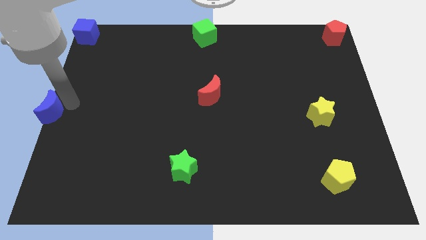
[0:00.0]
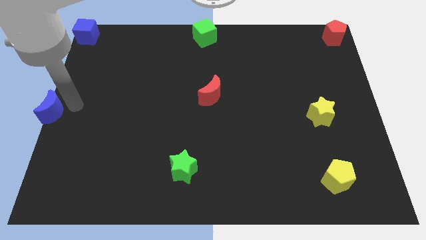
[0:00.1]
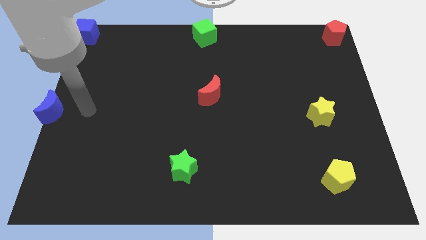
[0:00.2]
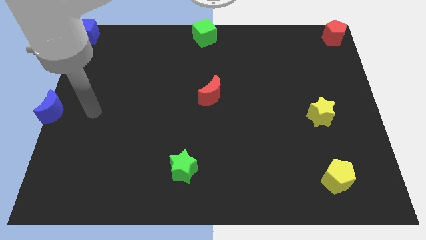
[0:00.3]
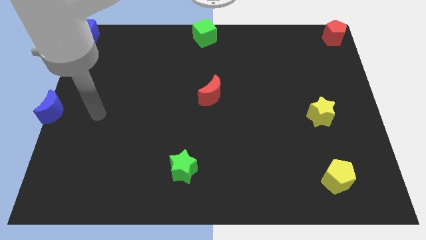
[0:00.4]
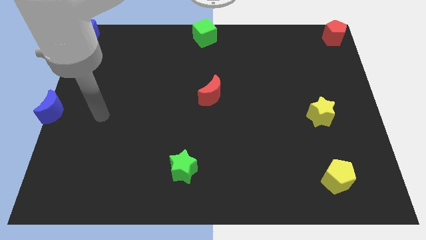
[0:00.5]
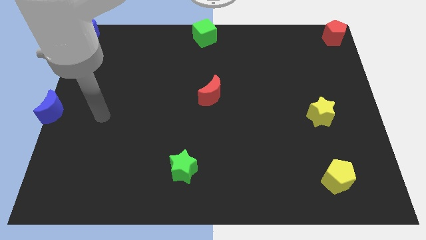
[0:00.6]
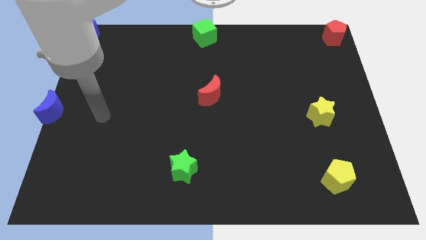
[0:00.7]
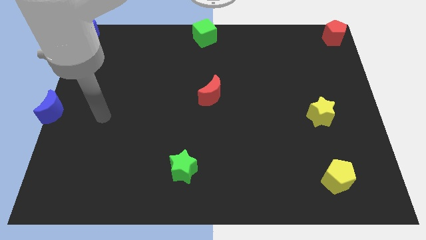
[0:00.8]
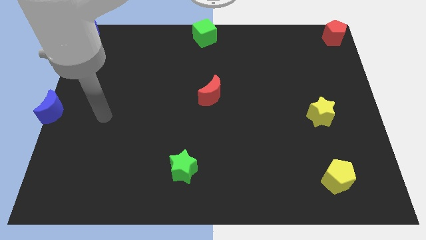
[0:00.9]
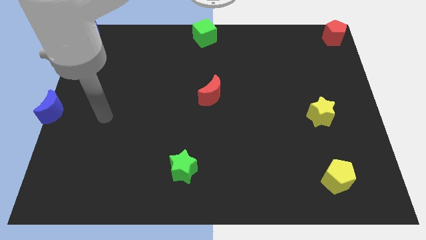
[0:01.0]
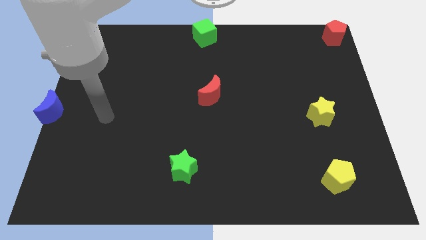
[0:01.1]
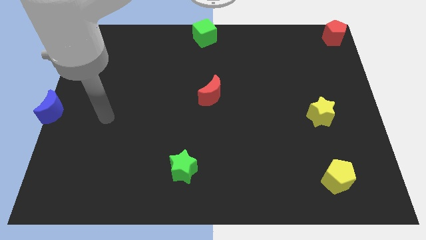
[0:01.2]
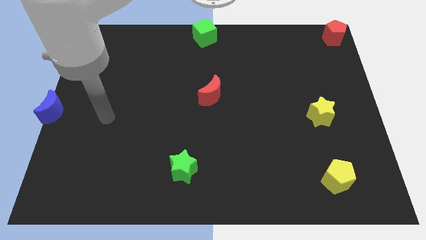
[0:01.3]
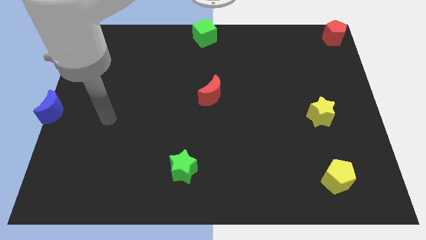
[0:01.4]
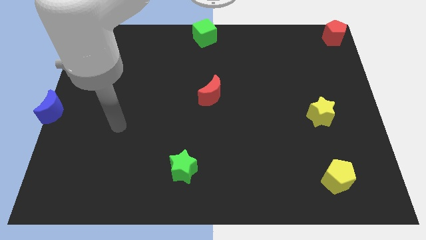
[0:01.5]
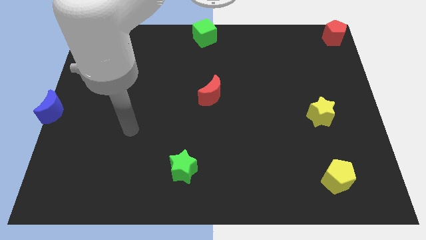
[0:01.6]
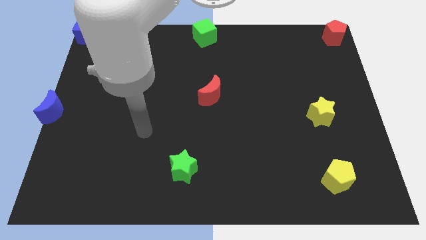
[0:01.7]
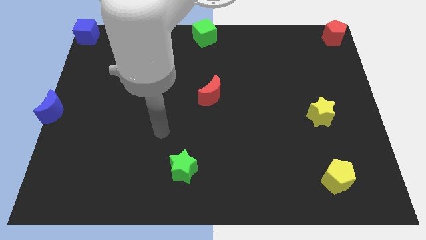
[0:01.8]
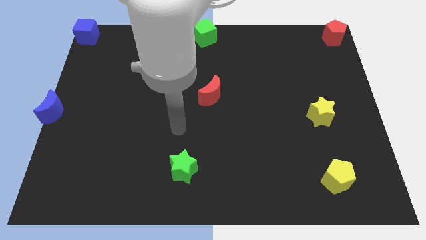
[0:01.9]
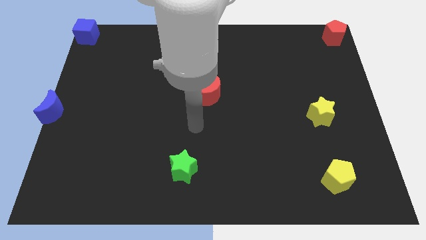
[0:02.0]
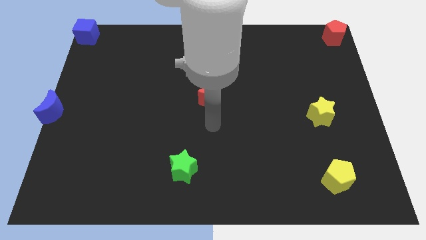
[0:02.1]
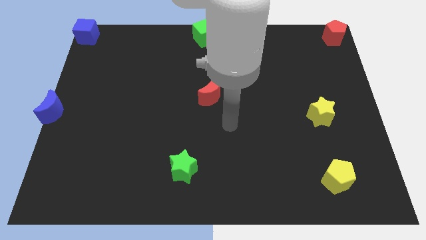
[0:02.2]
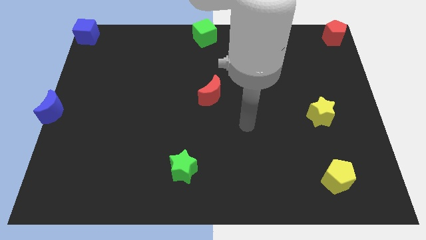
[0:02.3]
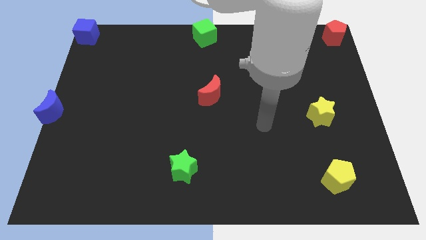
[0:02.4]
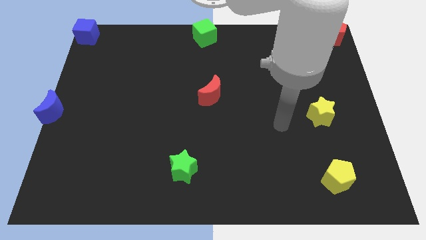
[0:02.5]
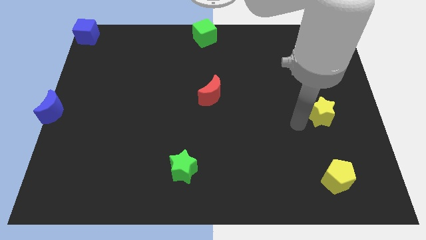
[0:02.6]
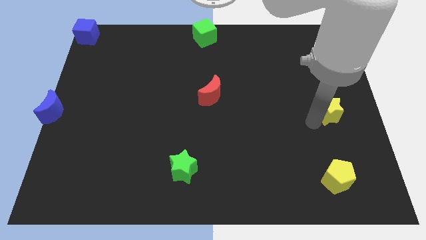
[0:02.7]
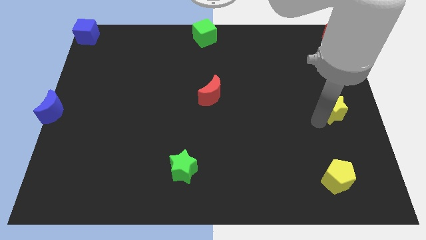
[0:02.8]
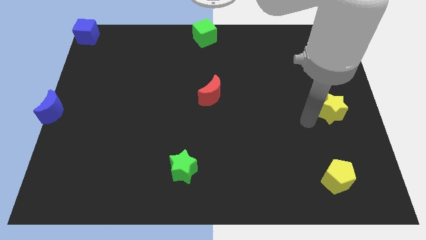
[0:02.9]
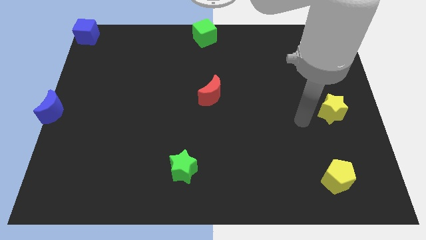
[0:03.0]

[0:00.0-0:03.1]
push the yellow star to the top of the yellow pentagon

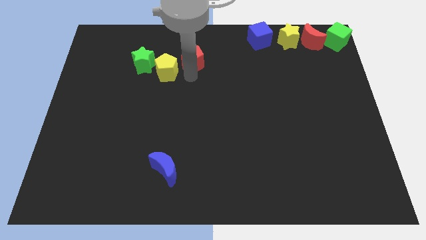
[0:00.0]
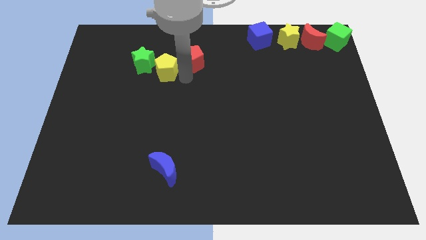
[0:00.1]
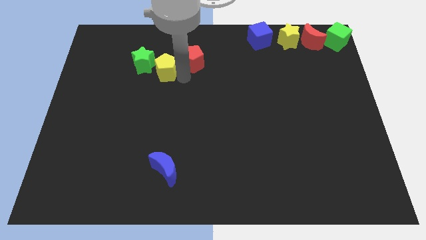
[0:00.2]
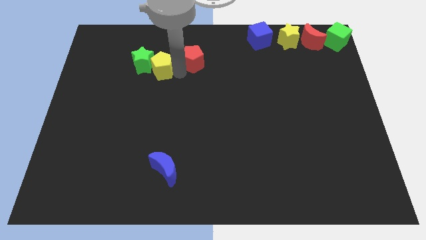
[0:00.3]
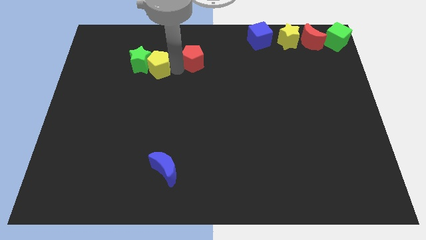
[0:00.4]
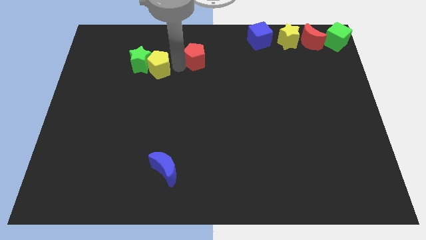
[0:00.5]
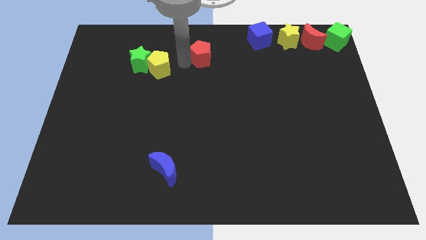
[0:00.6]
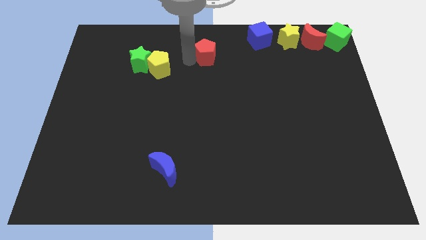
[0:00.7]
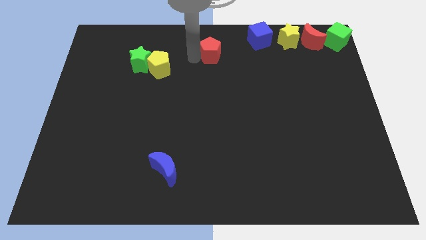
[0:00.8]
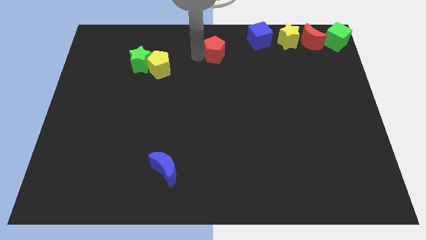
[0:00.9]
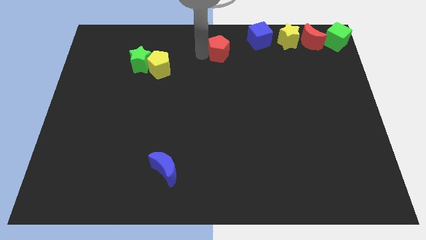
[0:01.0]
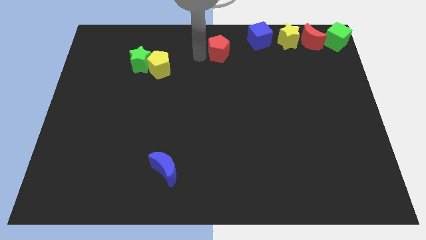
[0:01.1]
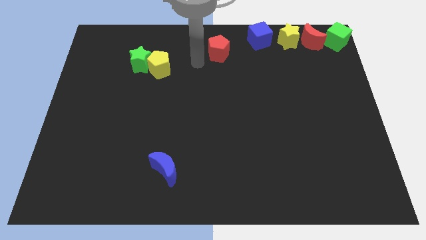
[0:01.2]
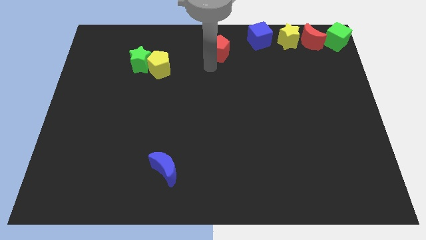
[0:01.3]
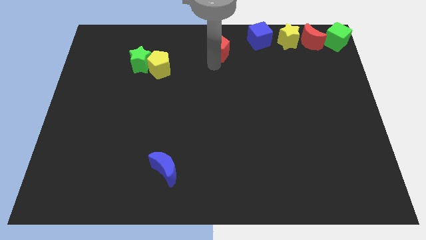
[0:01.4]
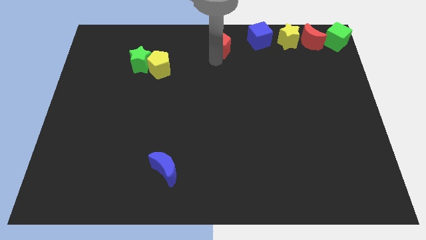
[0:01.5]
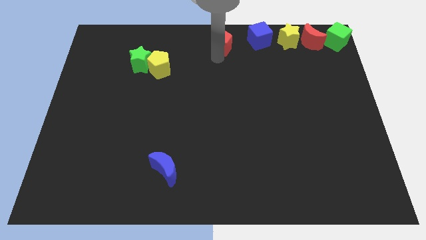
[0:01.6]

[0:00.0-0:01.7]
push the red pentagon to the left of the blue cube

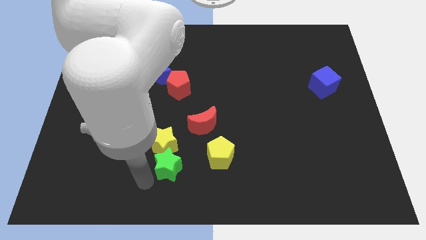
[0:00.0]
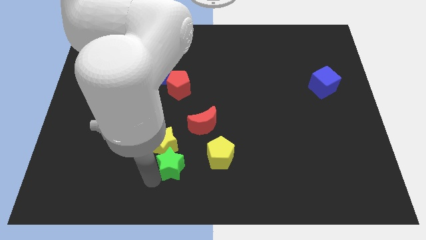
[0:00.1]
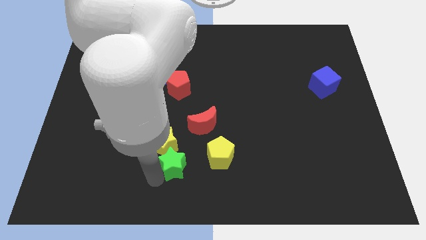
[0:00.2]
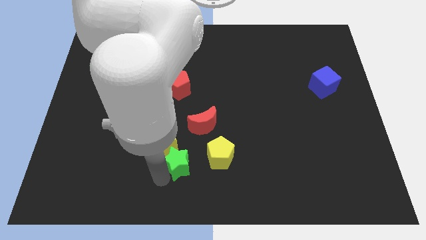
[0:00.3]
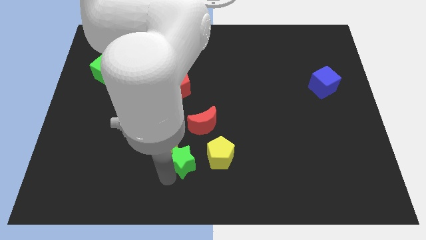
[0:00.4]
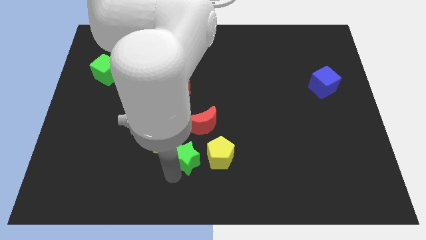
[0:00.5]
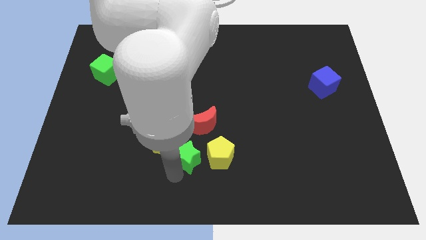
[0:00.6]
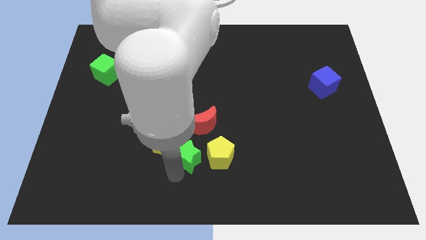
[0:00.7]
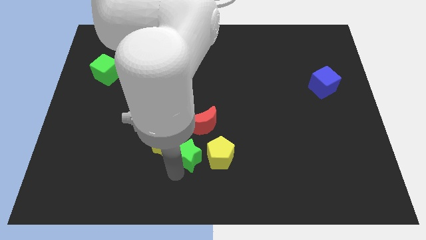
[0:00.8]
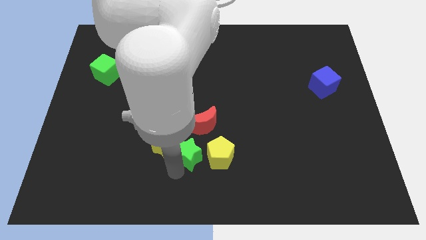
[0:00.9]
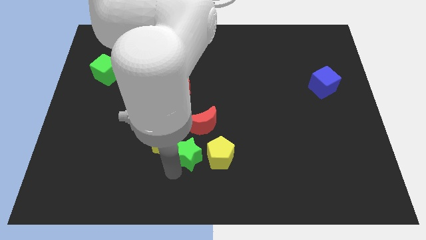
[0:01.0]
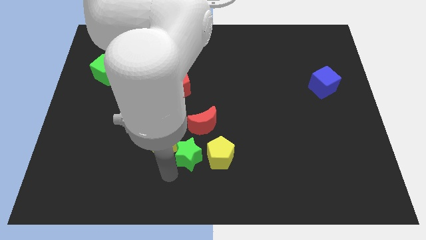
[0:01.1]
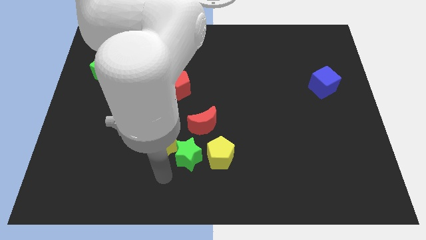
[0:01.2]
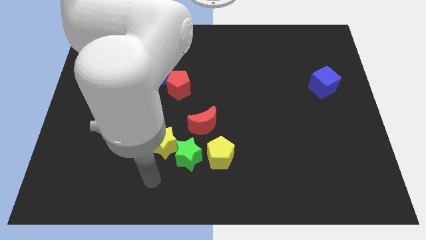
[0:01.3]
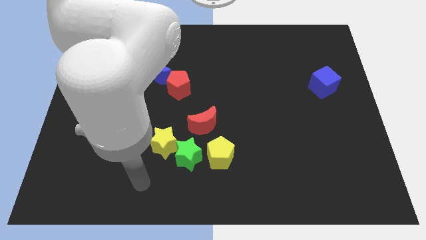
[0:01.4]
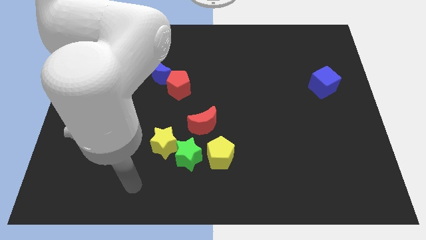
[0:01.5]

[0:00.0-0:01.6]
put the green star to the left of the yellow pentagon

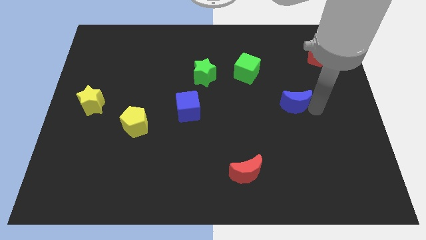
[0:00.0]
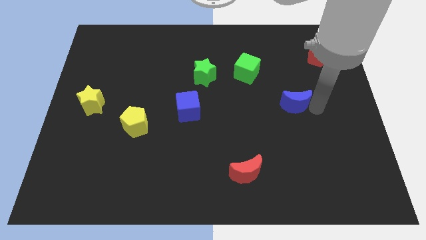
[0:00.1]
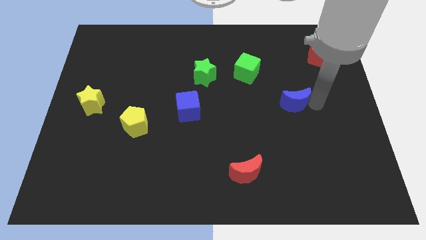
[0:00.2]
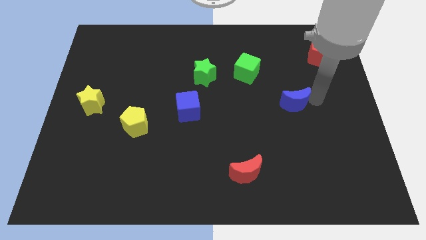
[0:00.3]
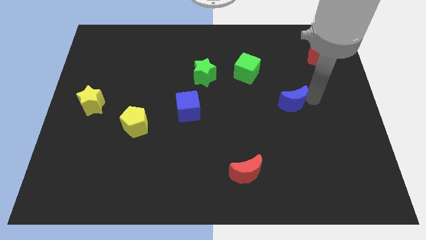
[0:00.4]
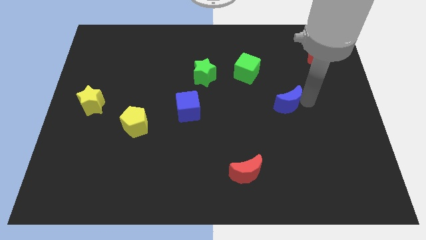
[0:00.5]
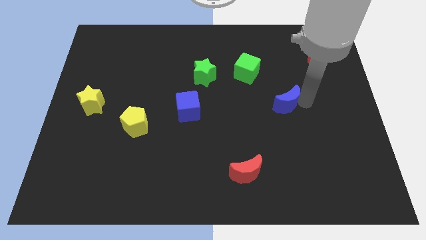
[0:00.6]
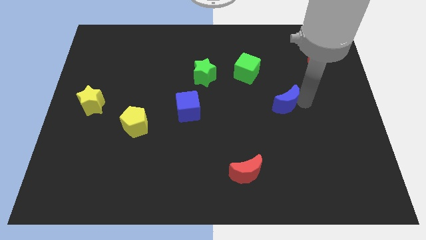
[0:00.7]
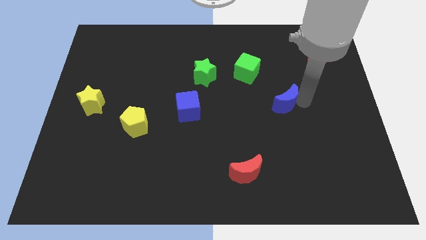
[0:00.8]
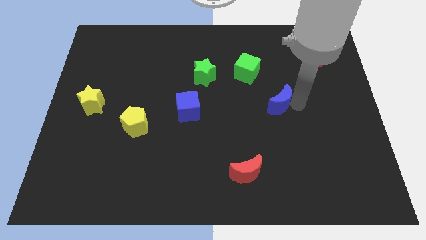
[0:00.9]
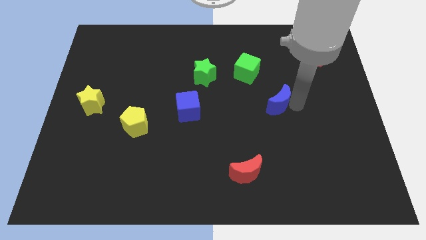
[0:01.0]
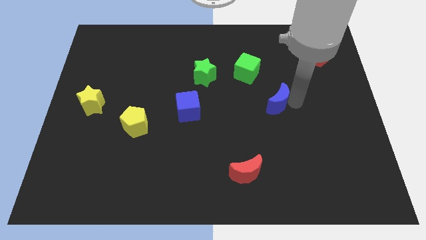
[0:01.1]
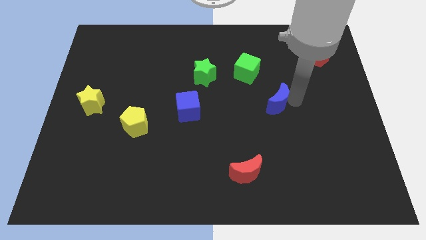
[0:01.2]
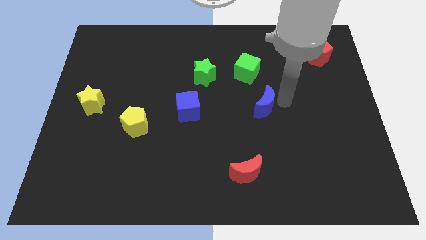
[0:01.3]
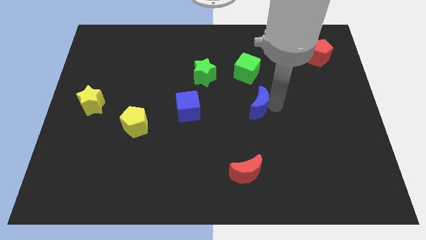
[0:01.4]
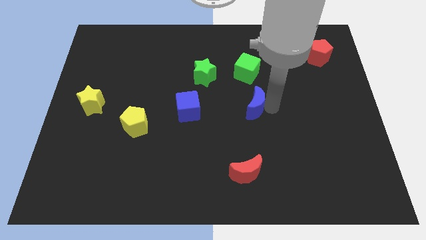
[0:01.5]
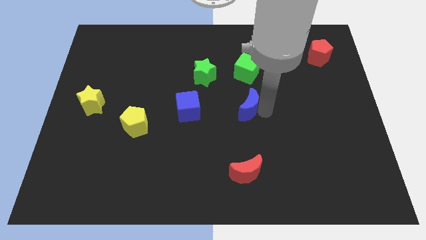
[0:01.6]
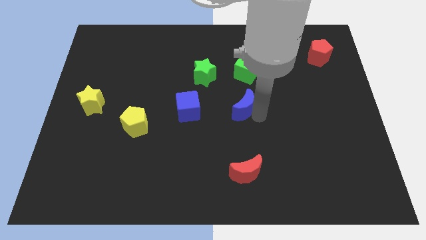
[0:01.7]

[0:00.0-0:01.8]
place the blue moon under the green cube

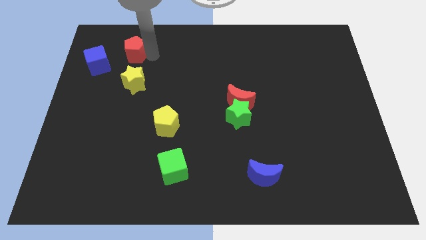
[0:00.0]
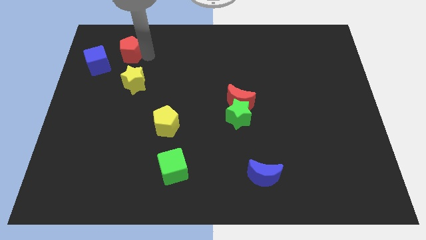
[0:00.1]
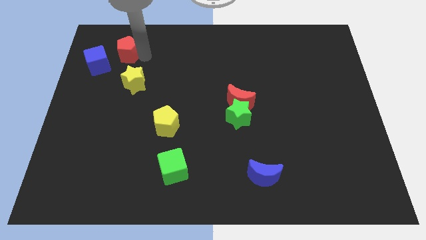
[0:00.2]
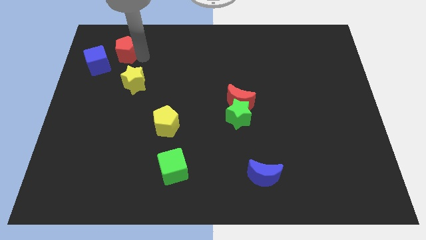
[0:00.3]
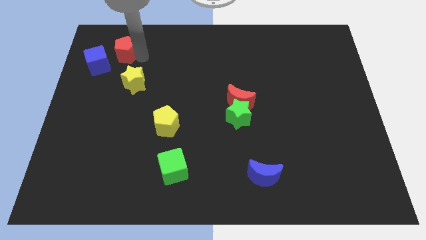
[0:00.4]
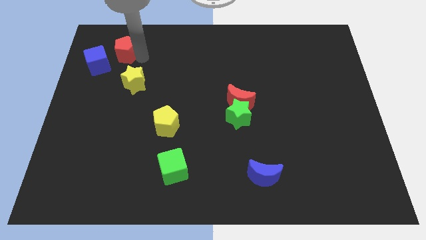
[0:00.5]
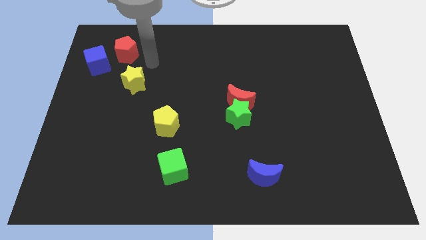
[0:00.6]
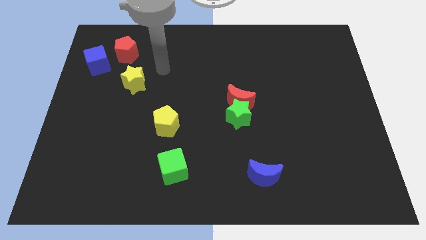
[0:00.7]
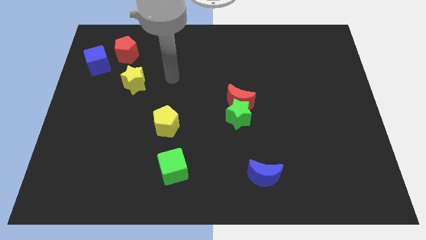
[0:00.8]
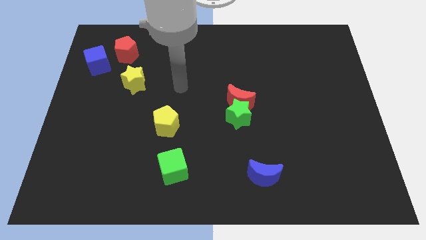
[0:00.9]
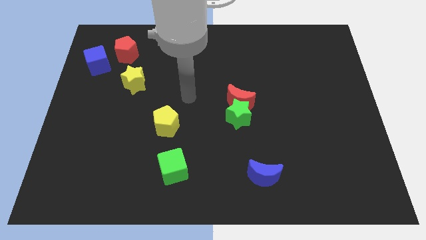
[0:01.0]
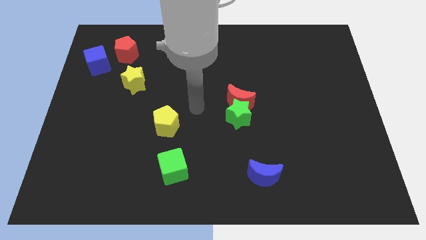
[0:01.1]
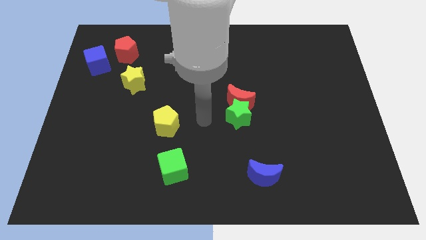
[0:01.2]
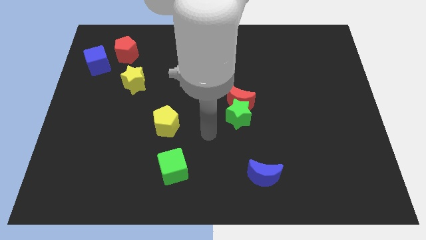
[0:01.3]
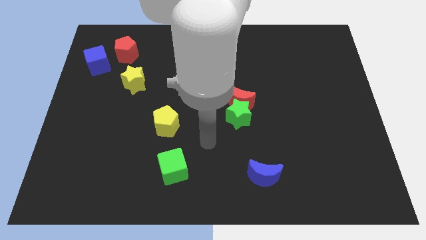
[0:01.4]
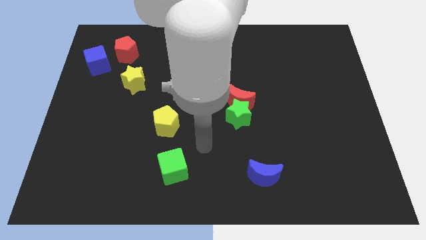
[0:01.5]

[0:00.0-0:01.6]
move the red pentagon towards the blue cube
